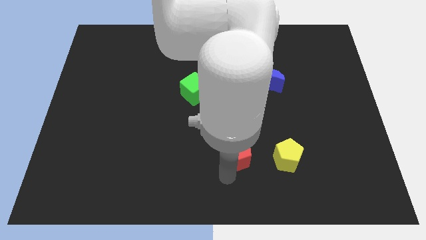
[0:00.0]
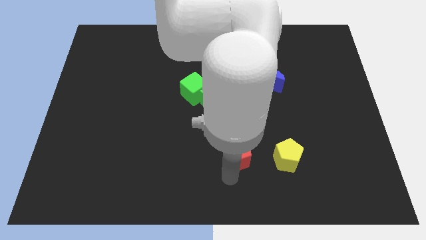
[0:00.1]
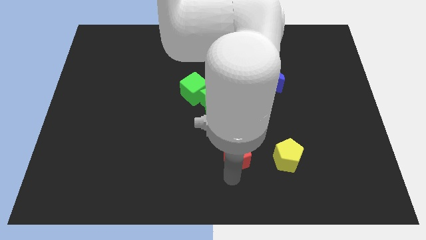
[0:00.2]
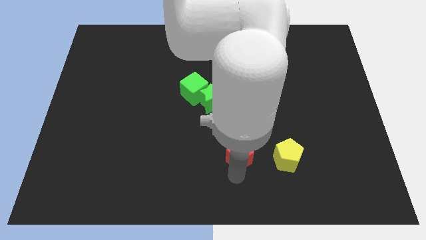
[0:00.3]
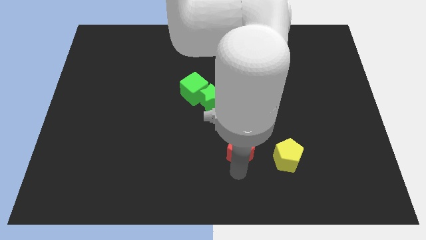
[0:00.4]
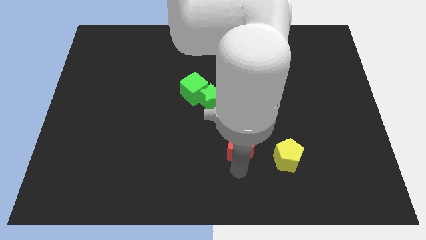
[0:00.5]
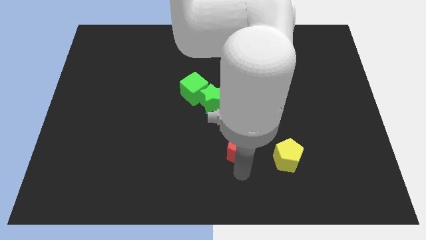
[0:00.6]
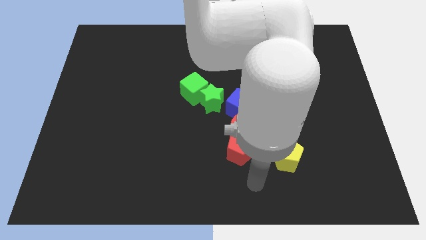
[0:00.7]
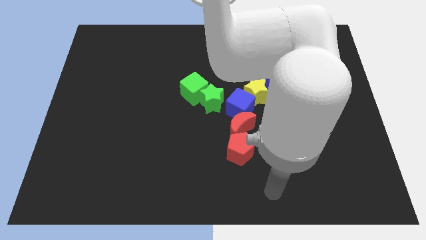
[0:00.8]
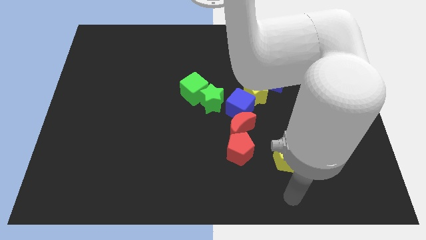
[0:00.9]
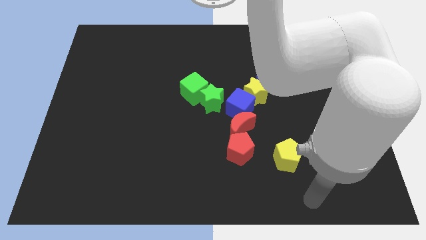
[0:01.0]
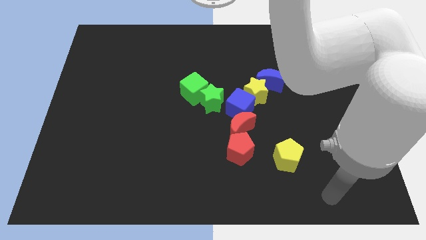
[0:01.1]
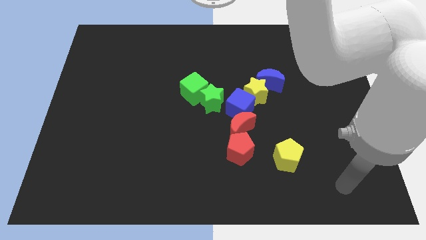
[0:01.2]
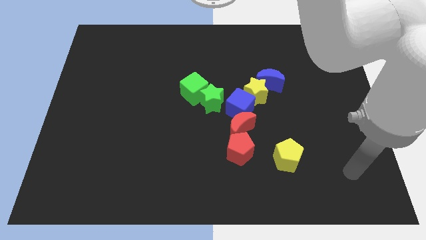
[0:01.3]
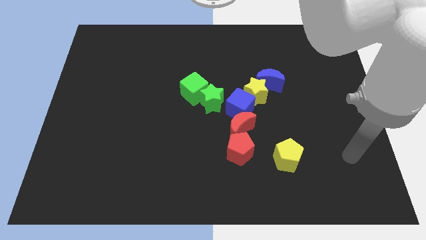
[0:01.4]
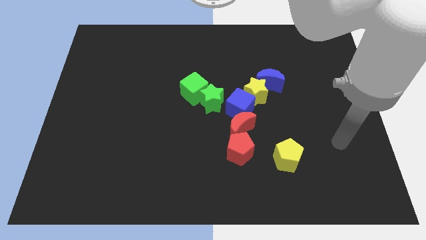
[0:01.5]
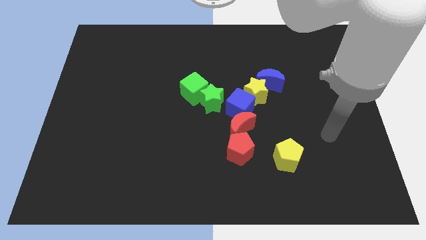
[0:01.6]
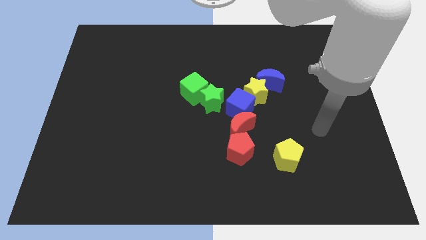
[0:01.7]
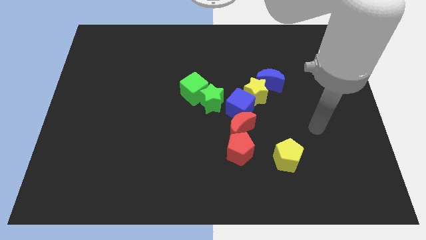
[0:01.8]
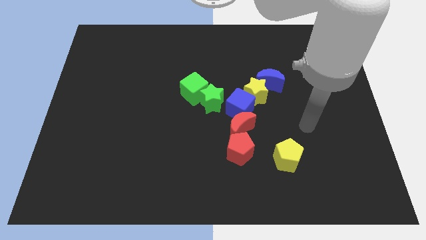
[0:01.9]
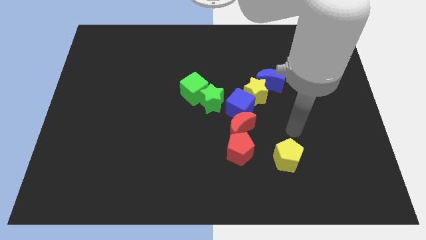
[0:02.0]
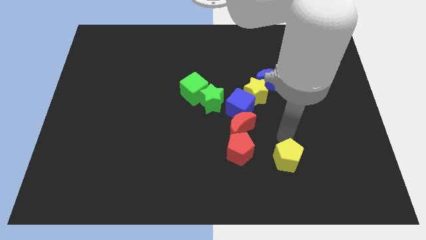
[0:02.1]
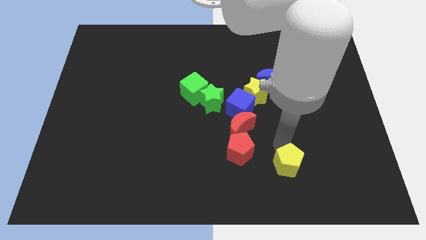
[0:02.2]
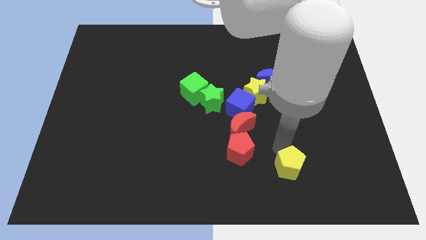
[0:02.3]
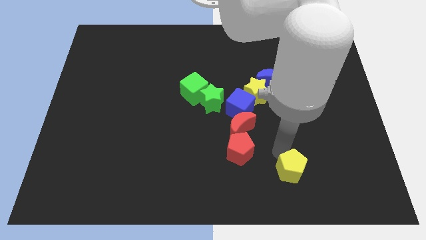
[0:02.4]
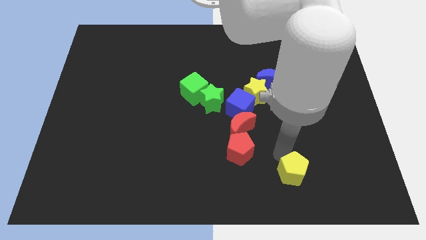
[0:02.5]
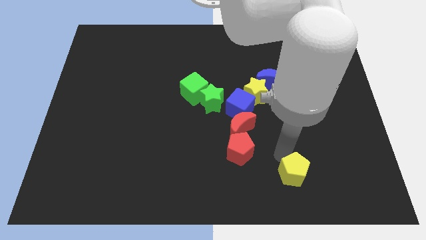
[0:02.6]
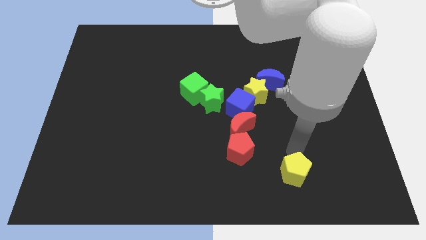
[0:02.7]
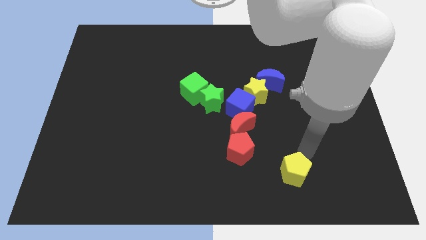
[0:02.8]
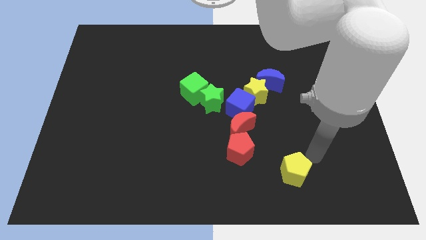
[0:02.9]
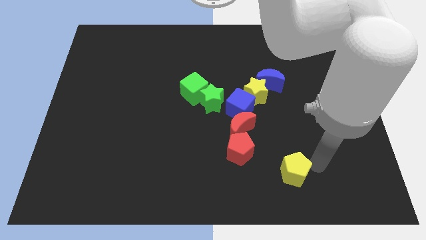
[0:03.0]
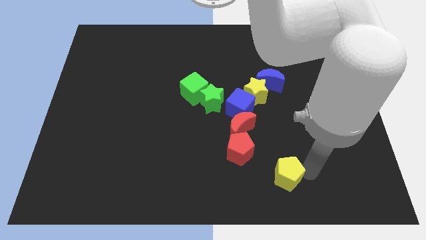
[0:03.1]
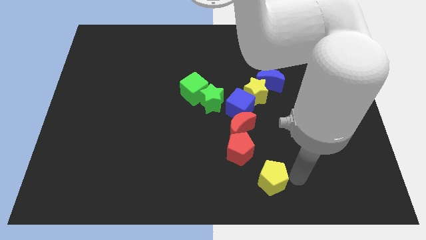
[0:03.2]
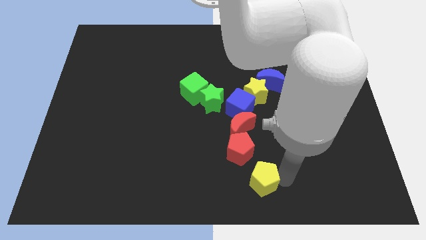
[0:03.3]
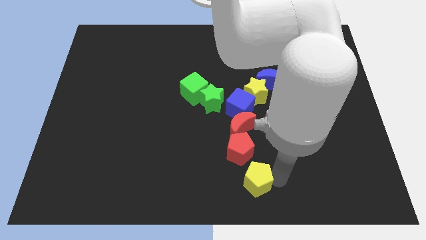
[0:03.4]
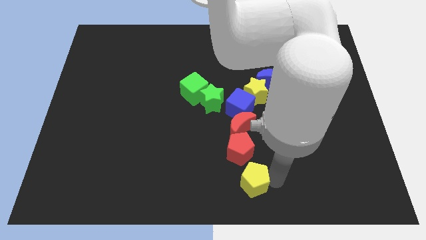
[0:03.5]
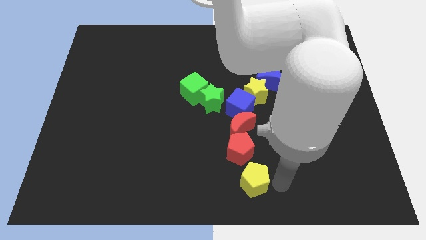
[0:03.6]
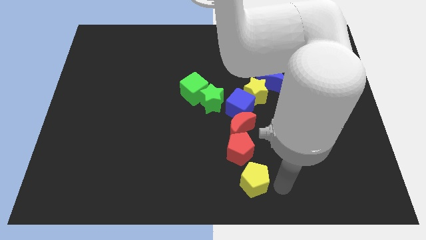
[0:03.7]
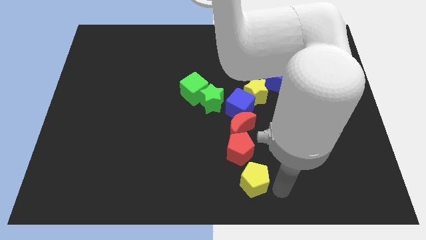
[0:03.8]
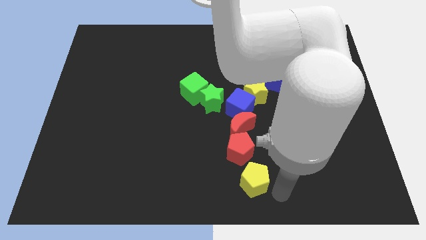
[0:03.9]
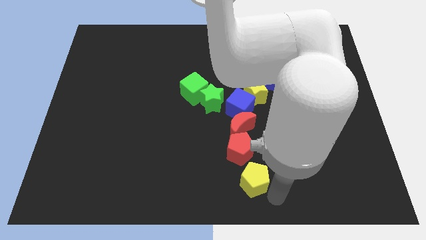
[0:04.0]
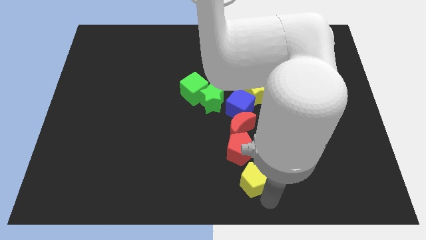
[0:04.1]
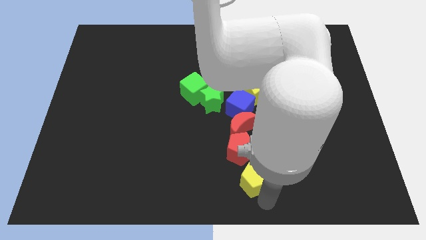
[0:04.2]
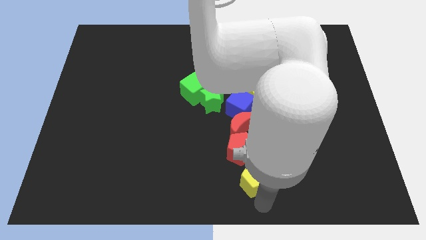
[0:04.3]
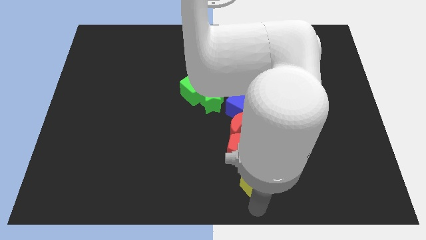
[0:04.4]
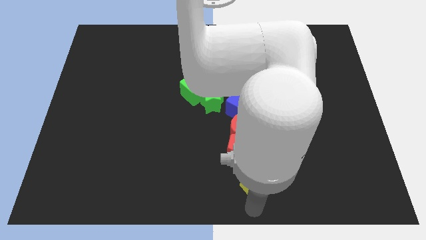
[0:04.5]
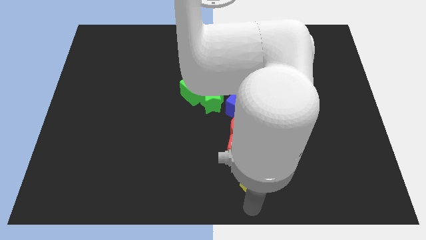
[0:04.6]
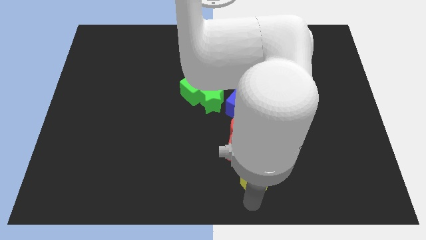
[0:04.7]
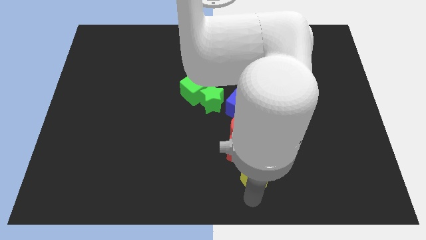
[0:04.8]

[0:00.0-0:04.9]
move the arm vertically below the yellow pentagon

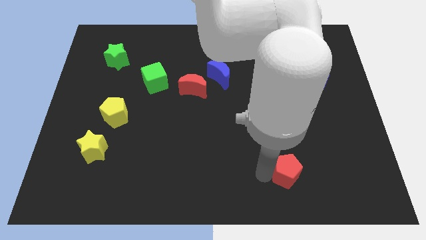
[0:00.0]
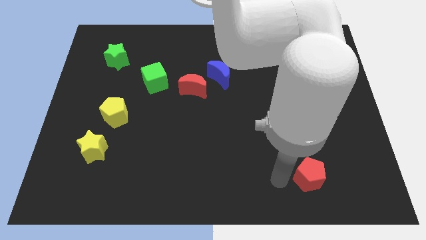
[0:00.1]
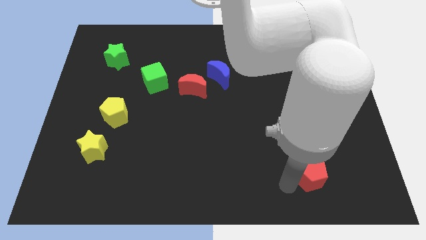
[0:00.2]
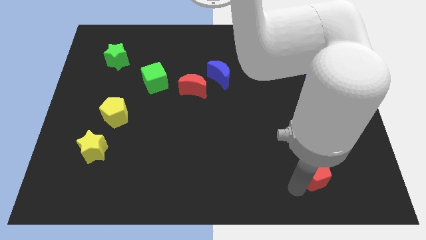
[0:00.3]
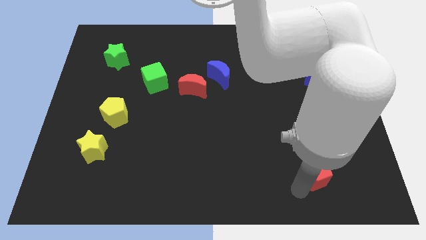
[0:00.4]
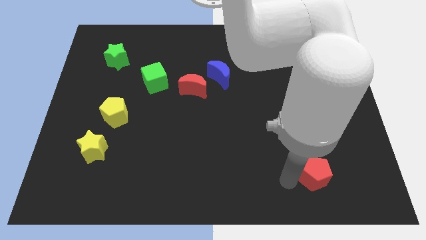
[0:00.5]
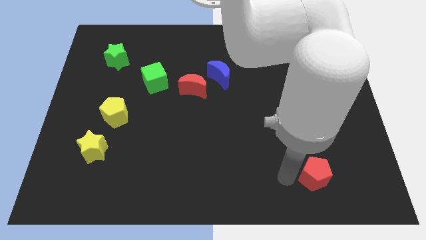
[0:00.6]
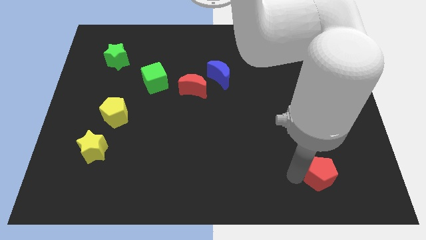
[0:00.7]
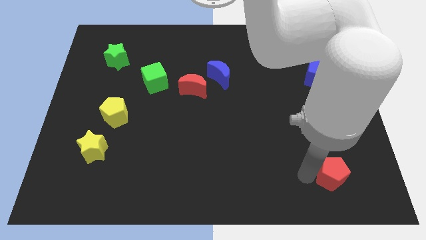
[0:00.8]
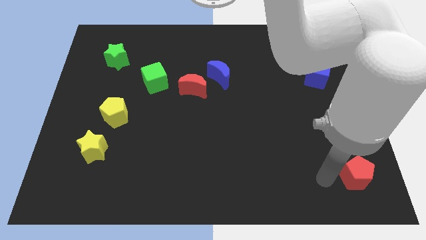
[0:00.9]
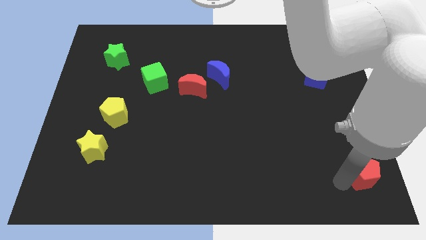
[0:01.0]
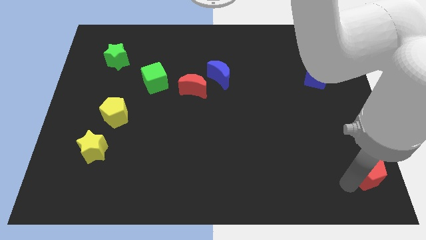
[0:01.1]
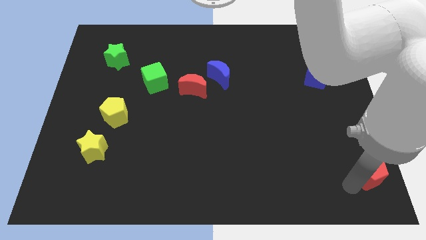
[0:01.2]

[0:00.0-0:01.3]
move the red pentagon to the right

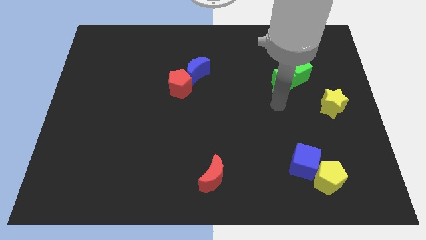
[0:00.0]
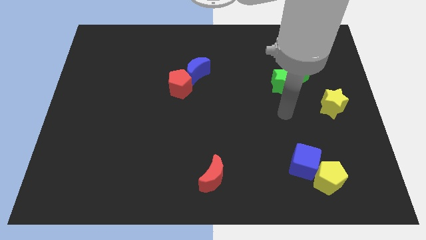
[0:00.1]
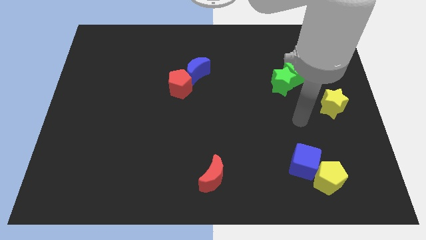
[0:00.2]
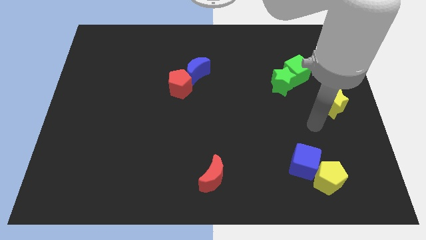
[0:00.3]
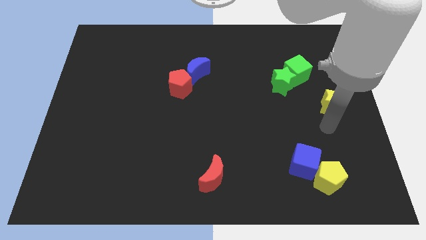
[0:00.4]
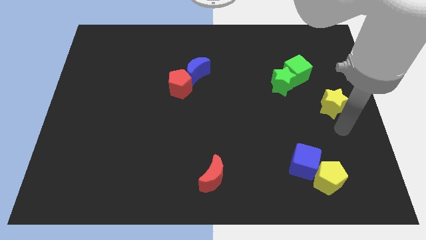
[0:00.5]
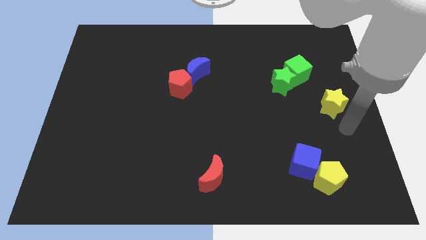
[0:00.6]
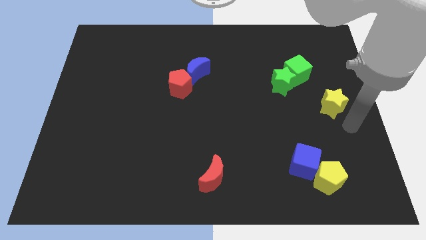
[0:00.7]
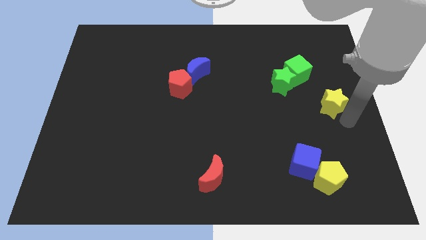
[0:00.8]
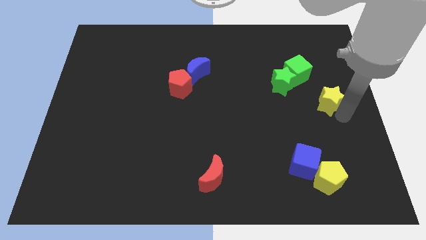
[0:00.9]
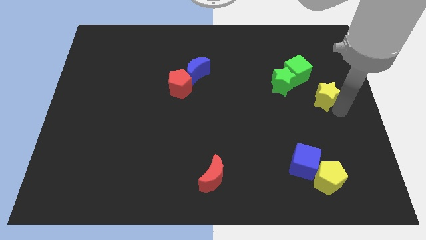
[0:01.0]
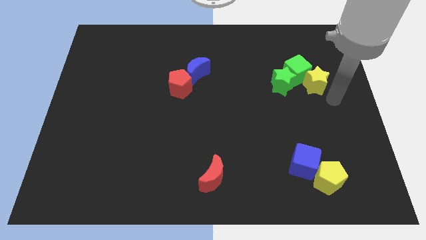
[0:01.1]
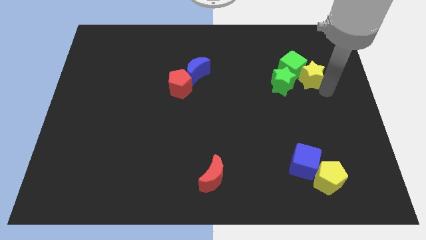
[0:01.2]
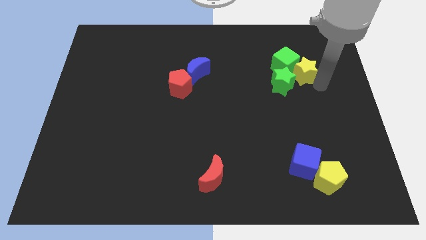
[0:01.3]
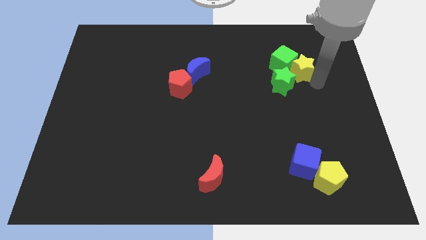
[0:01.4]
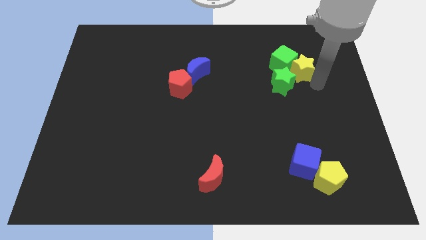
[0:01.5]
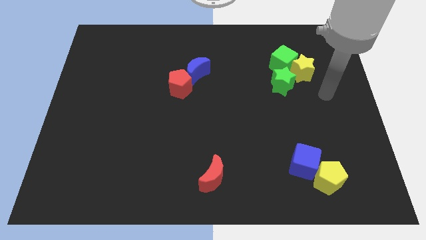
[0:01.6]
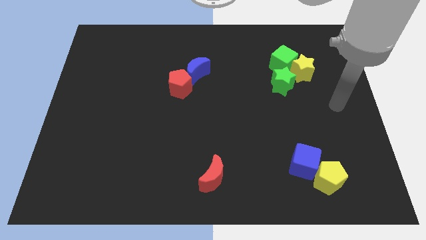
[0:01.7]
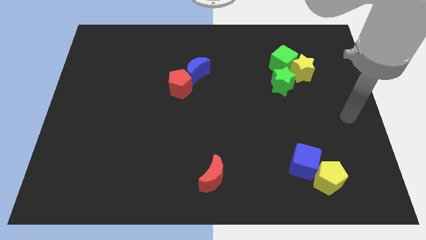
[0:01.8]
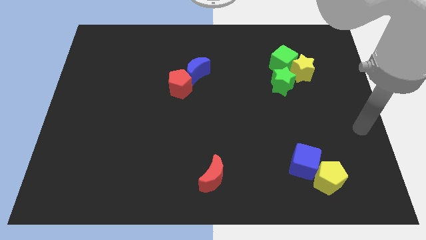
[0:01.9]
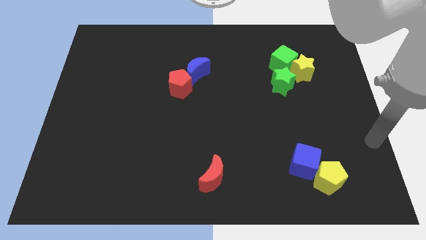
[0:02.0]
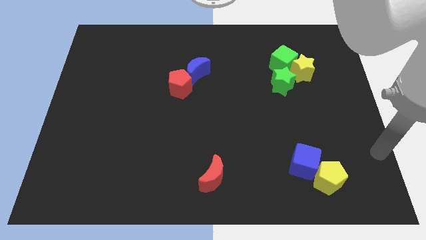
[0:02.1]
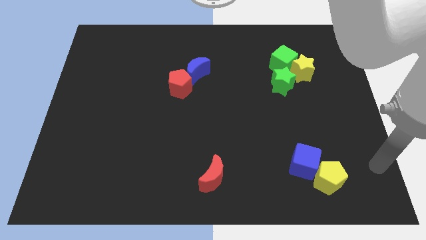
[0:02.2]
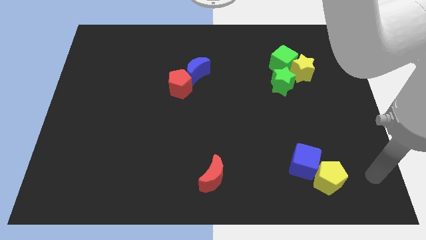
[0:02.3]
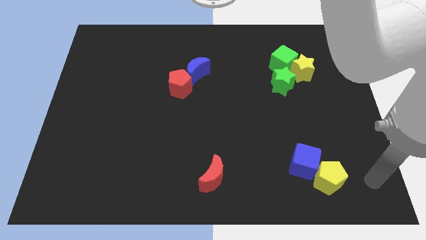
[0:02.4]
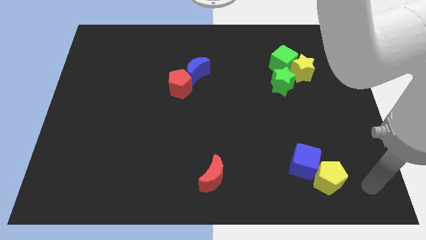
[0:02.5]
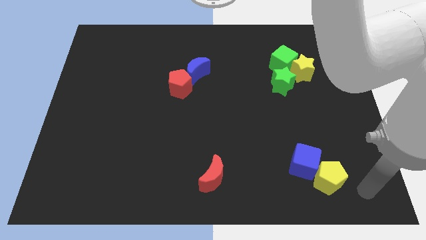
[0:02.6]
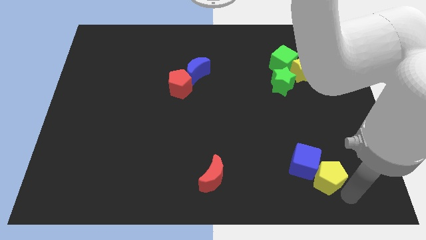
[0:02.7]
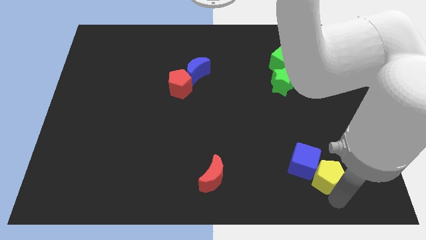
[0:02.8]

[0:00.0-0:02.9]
move the yellow star to the bottom right side of the green cube
